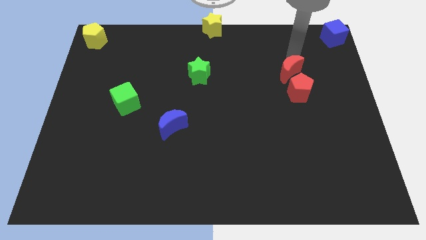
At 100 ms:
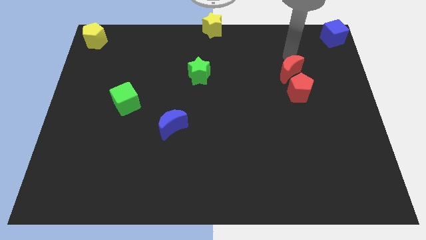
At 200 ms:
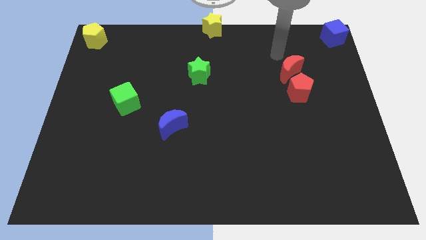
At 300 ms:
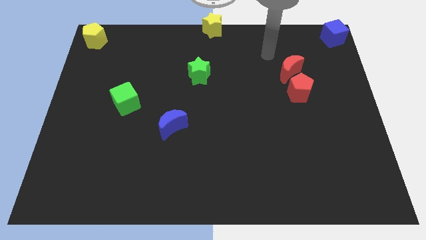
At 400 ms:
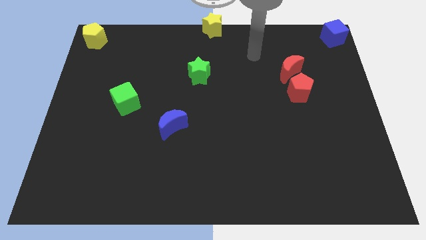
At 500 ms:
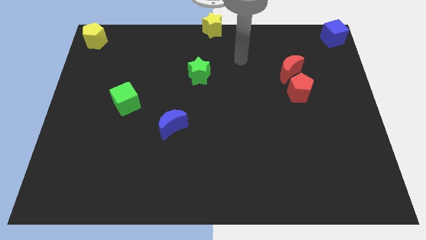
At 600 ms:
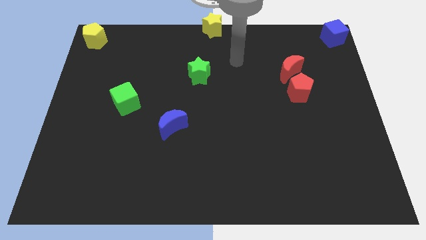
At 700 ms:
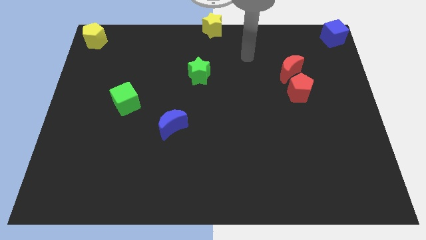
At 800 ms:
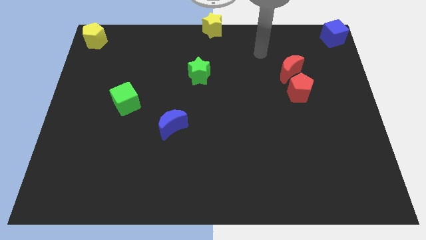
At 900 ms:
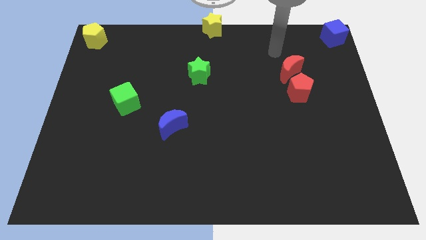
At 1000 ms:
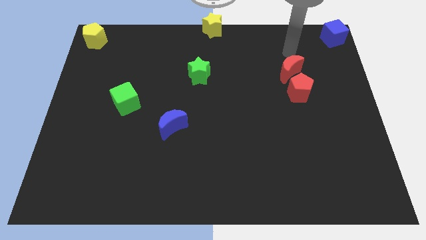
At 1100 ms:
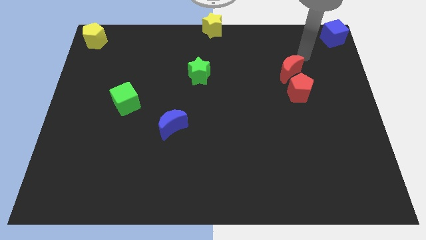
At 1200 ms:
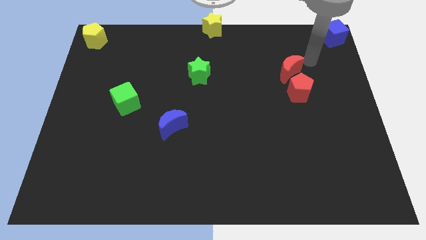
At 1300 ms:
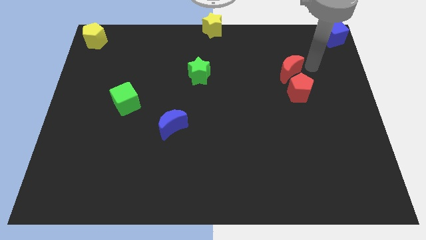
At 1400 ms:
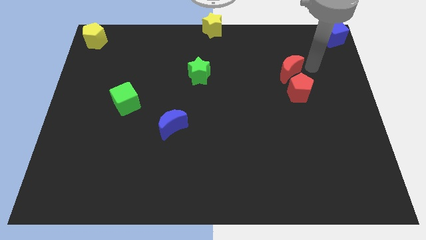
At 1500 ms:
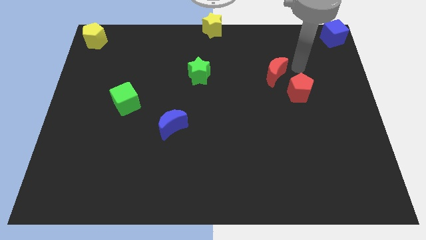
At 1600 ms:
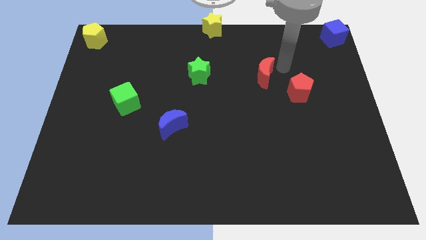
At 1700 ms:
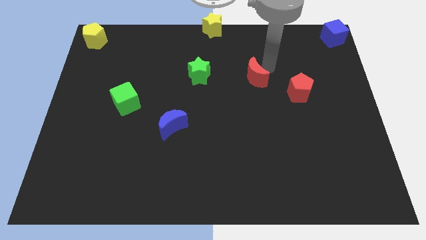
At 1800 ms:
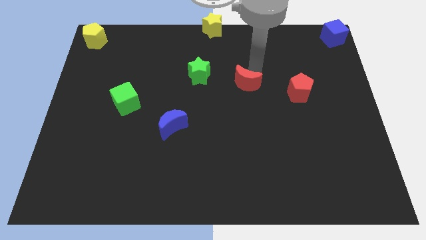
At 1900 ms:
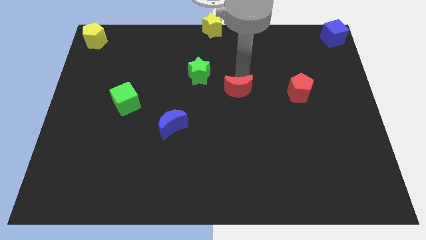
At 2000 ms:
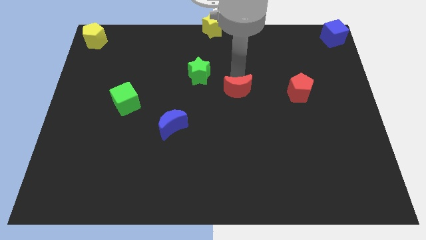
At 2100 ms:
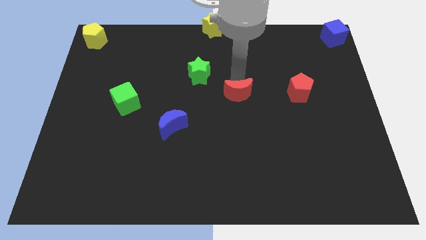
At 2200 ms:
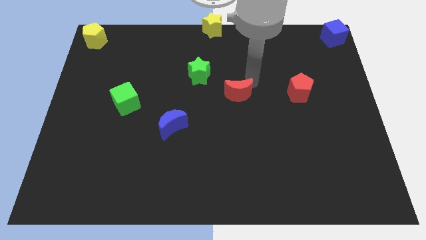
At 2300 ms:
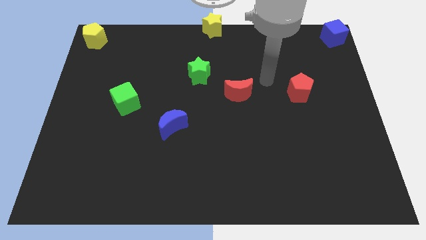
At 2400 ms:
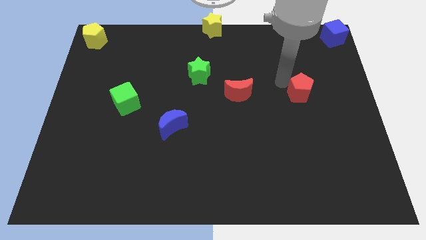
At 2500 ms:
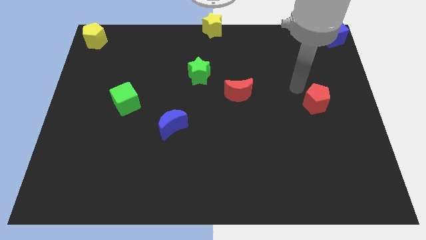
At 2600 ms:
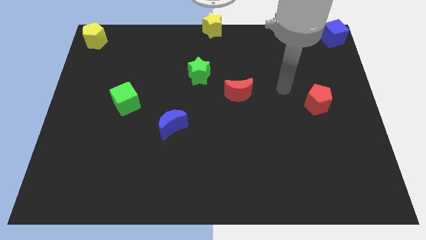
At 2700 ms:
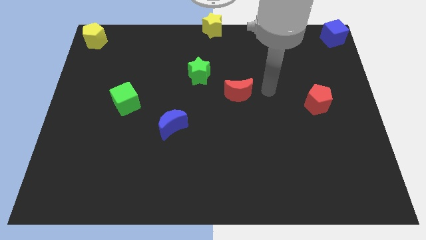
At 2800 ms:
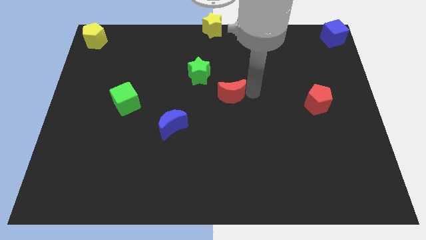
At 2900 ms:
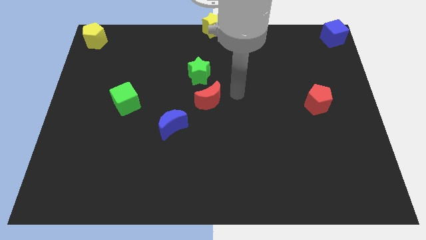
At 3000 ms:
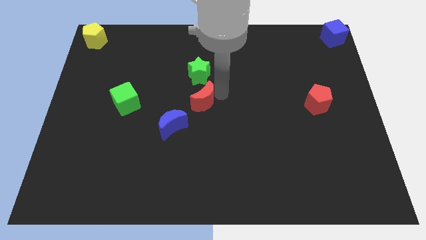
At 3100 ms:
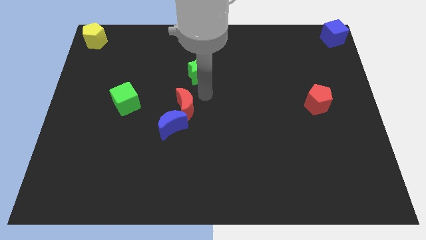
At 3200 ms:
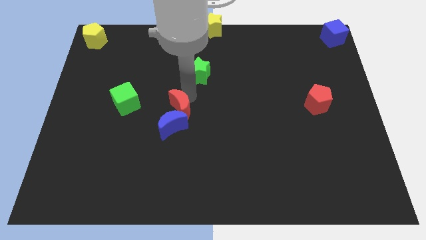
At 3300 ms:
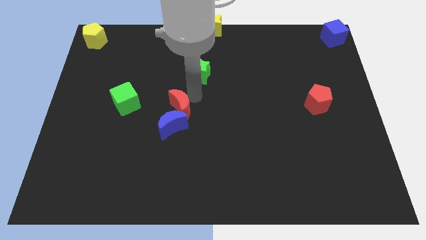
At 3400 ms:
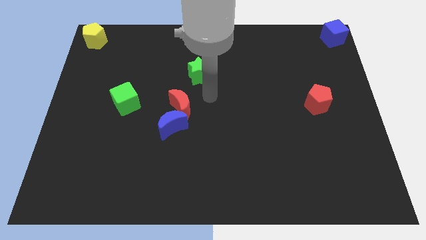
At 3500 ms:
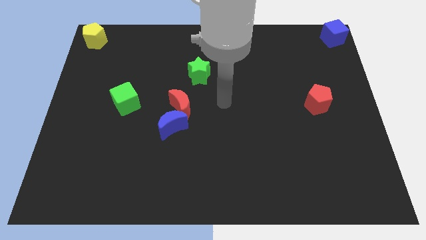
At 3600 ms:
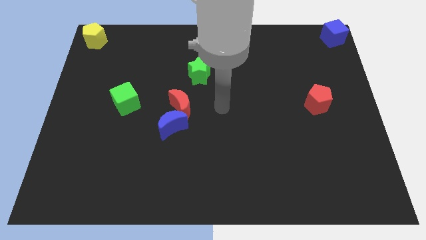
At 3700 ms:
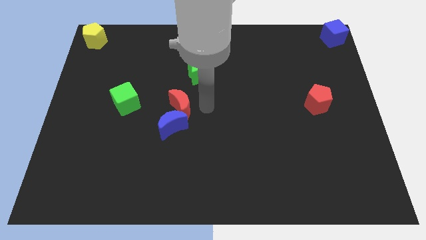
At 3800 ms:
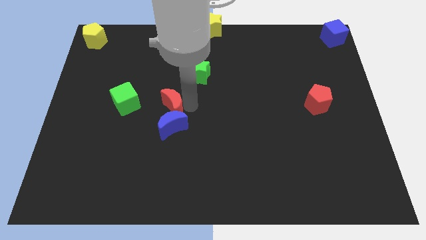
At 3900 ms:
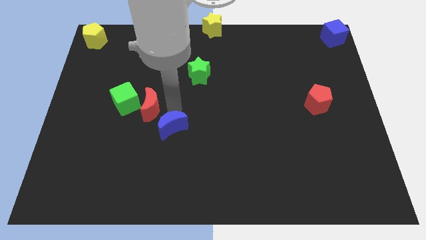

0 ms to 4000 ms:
push the red moon into the blue moon

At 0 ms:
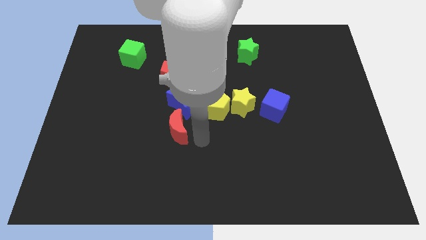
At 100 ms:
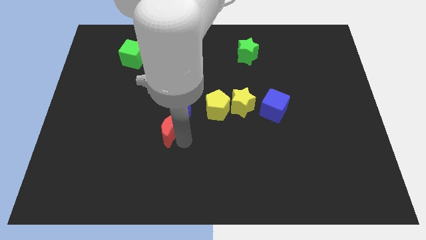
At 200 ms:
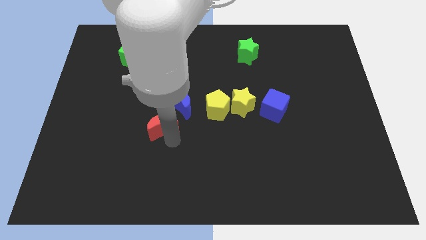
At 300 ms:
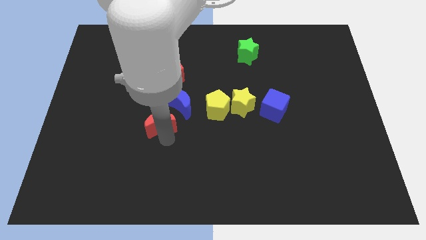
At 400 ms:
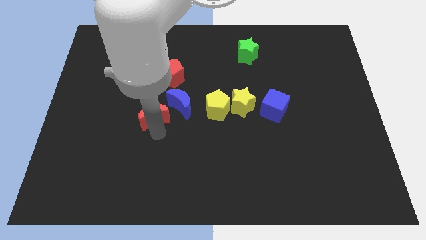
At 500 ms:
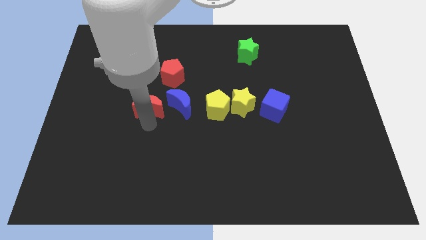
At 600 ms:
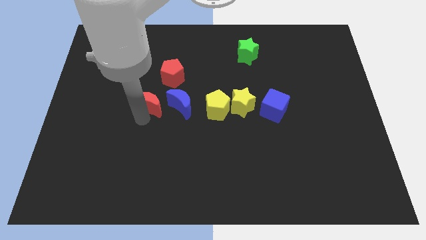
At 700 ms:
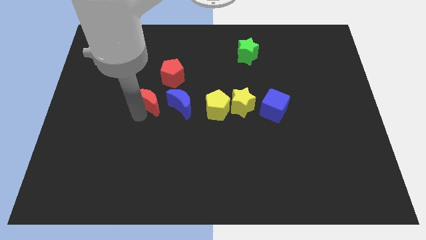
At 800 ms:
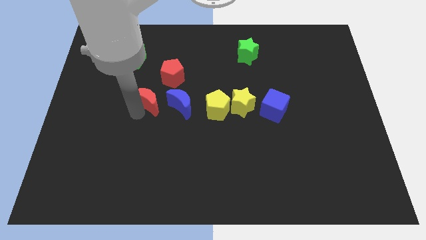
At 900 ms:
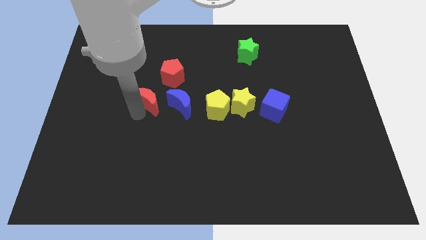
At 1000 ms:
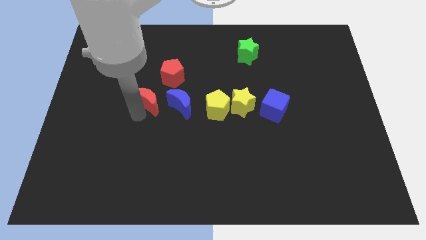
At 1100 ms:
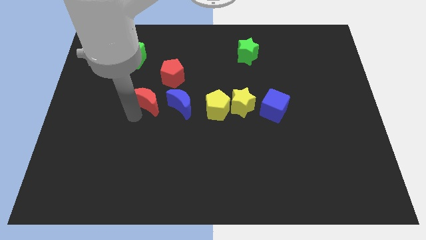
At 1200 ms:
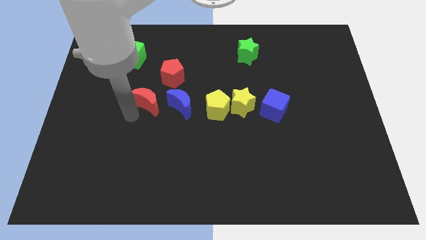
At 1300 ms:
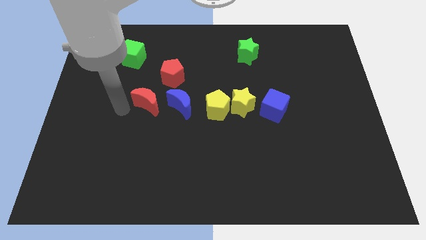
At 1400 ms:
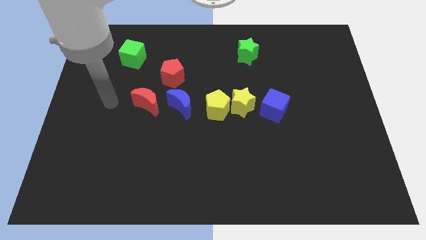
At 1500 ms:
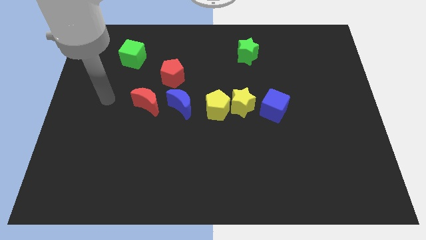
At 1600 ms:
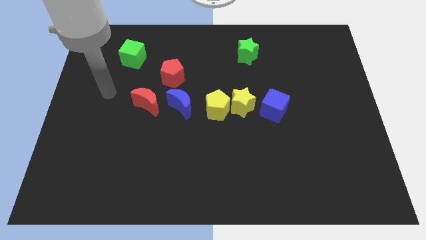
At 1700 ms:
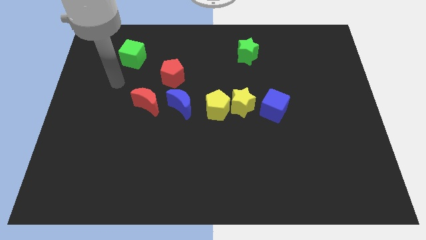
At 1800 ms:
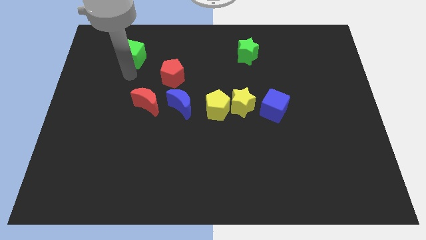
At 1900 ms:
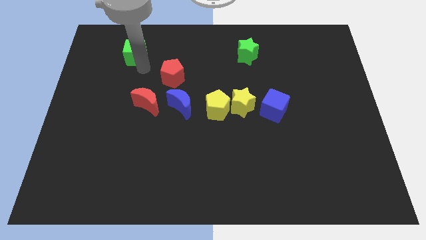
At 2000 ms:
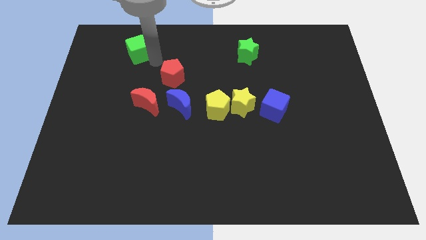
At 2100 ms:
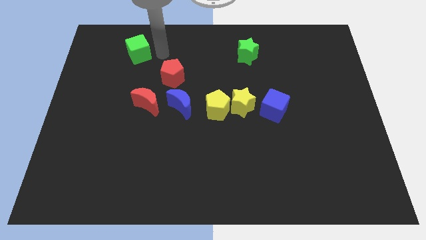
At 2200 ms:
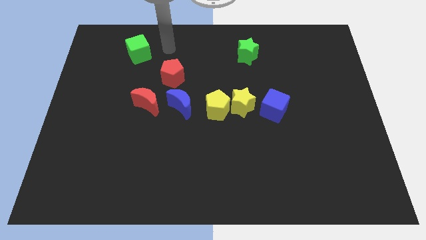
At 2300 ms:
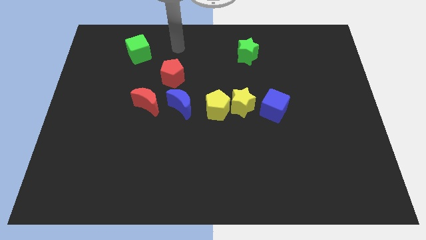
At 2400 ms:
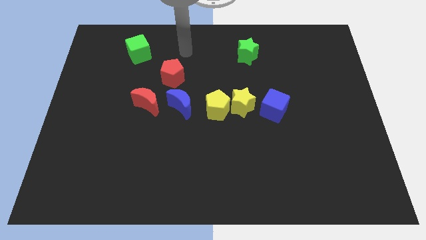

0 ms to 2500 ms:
move the red crescent to the left of blue crescent

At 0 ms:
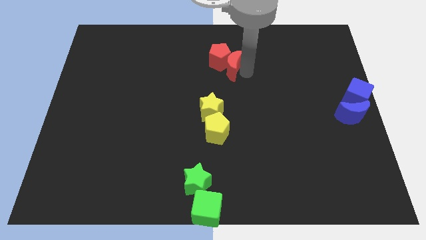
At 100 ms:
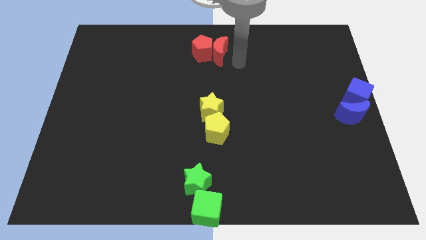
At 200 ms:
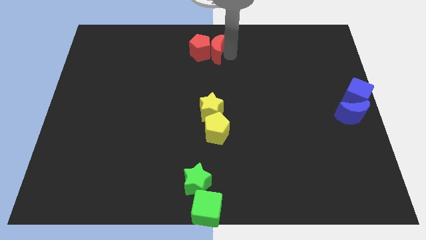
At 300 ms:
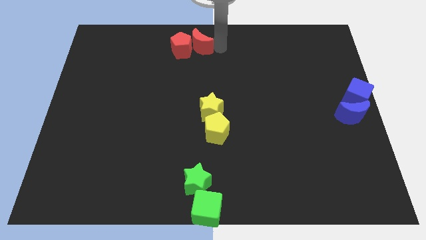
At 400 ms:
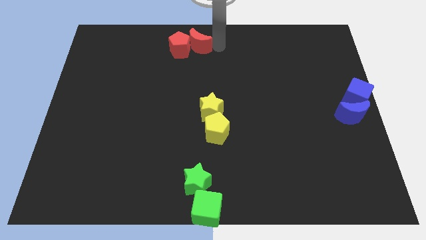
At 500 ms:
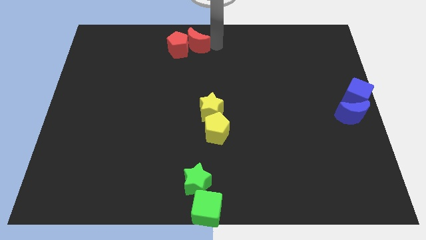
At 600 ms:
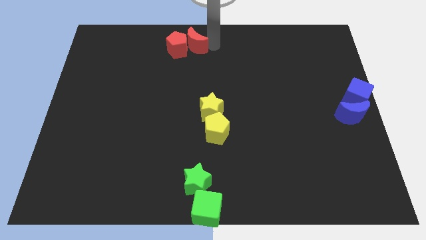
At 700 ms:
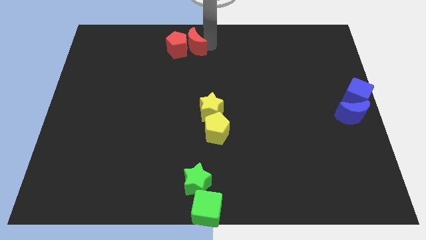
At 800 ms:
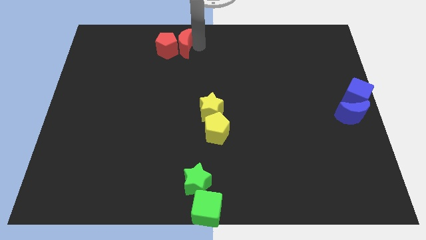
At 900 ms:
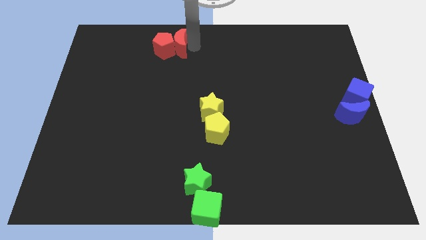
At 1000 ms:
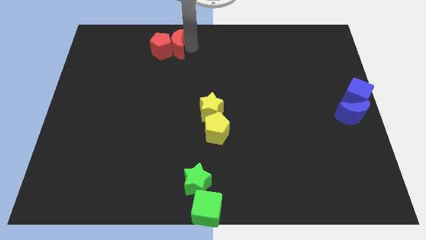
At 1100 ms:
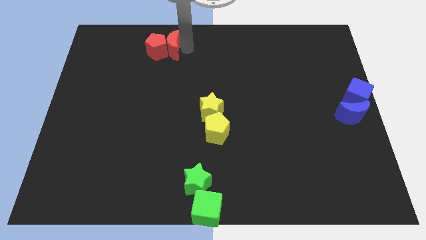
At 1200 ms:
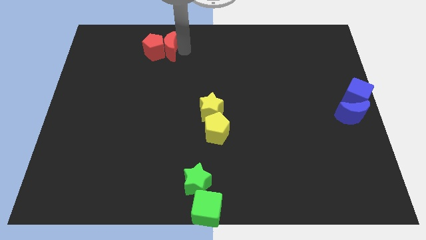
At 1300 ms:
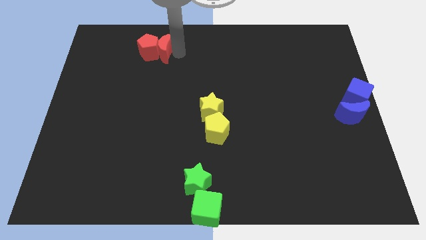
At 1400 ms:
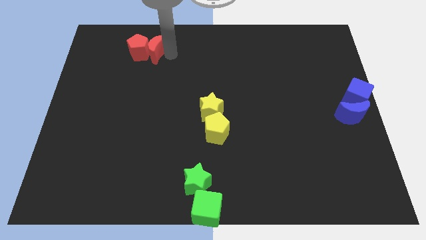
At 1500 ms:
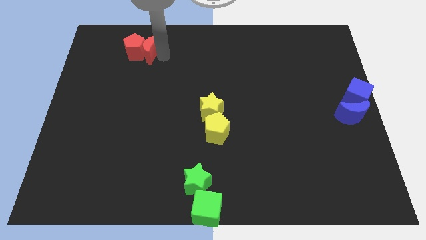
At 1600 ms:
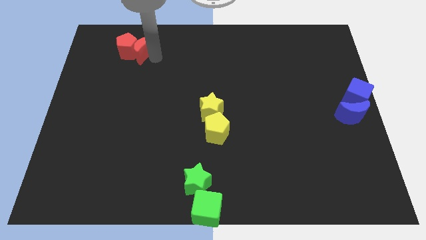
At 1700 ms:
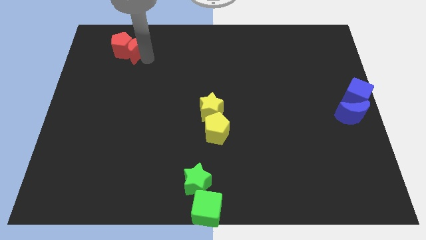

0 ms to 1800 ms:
push the red pentagon and red moon towards the top left side

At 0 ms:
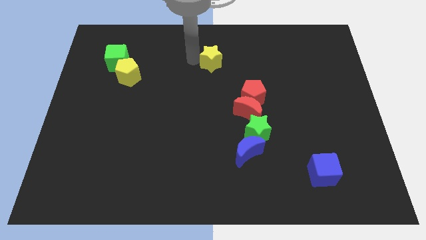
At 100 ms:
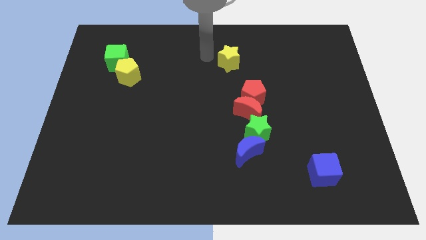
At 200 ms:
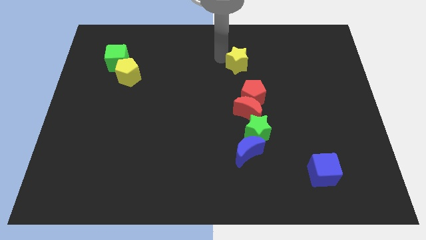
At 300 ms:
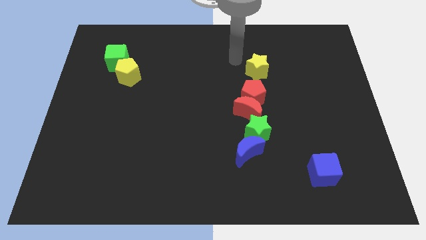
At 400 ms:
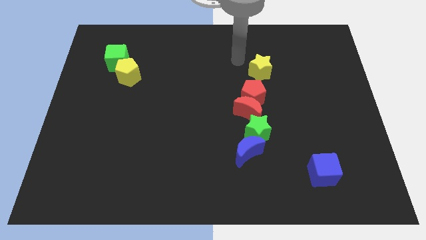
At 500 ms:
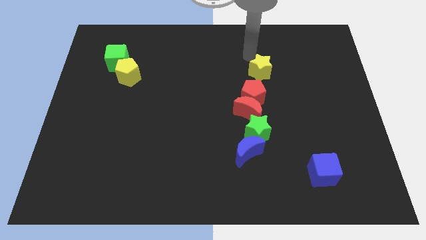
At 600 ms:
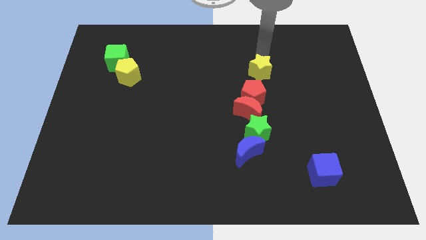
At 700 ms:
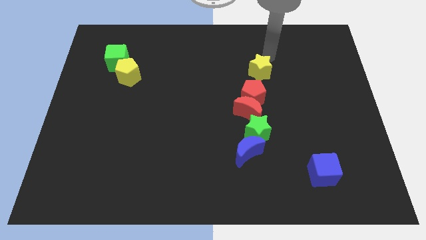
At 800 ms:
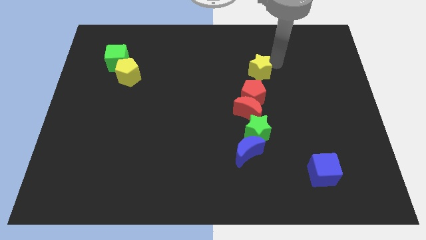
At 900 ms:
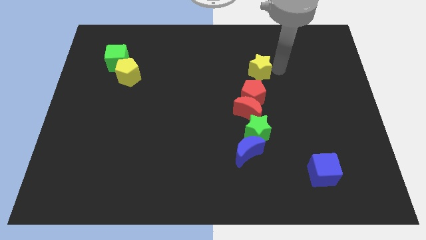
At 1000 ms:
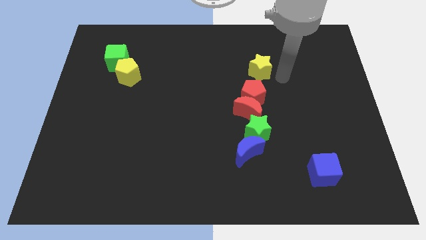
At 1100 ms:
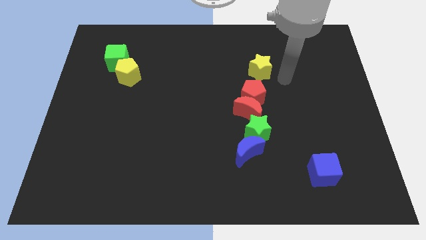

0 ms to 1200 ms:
push the yellow star above the red pentagon
